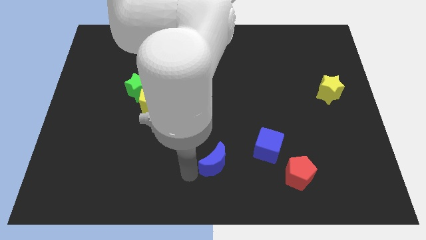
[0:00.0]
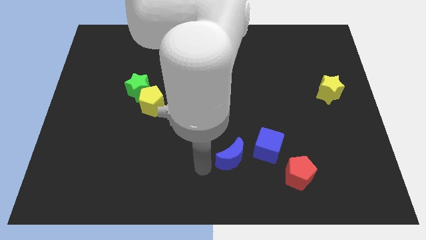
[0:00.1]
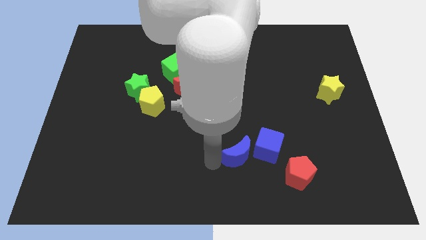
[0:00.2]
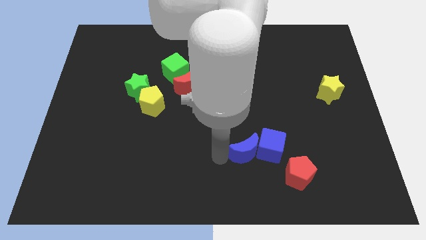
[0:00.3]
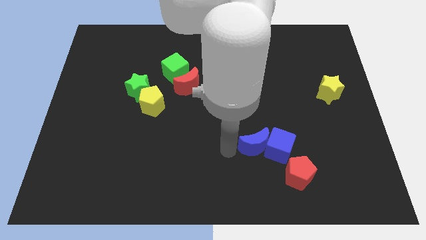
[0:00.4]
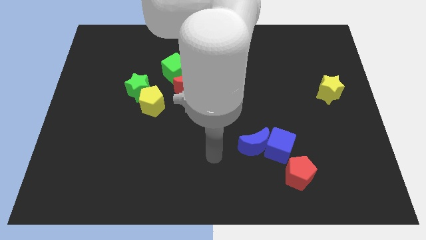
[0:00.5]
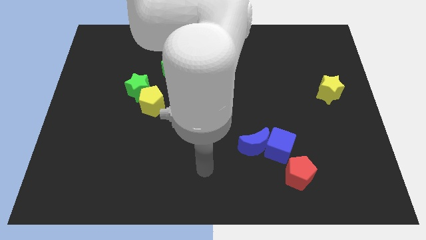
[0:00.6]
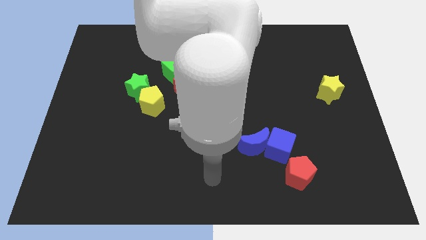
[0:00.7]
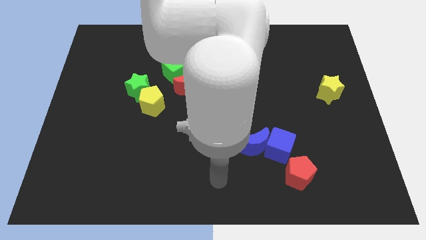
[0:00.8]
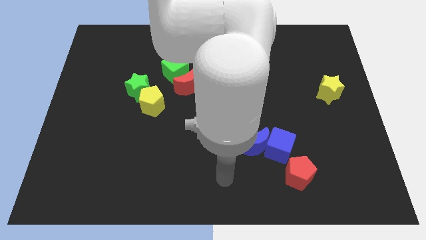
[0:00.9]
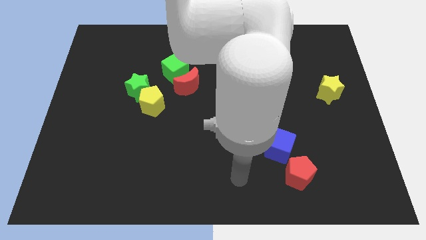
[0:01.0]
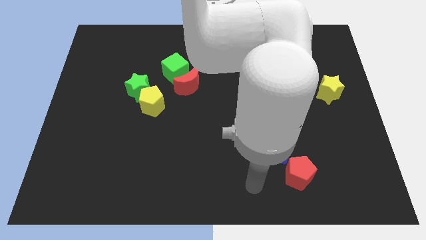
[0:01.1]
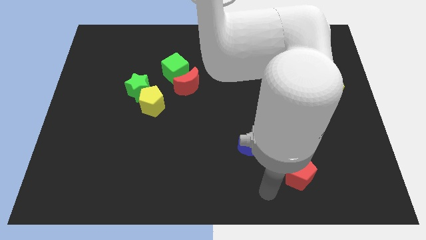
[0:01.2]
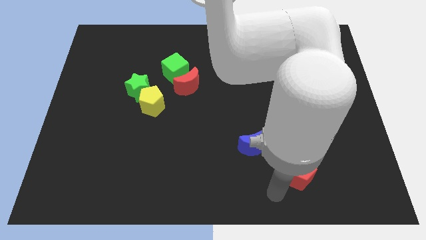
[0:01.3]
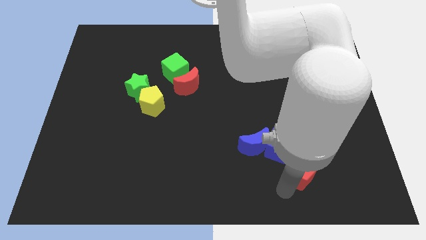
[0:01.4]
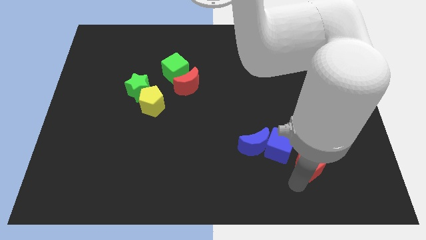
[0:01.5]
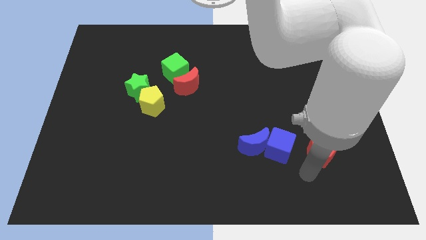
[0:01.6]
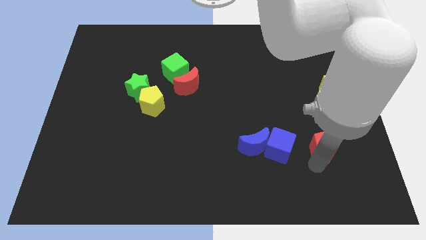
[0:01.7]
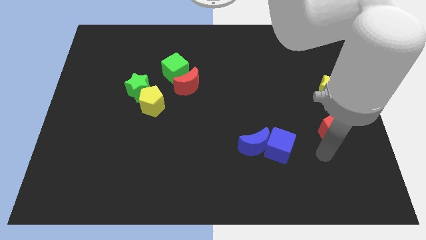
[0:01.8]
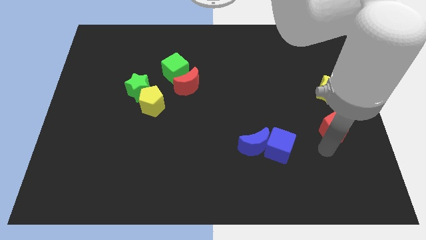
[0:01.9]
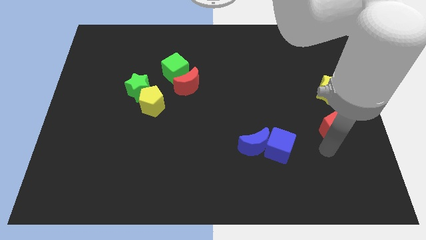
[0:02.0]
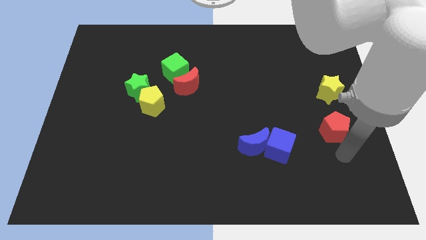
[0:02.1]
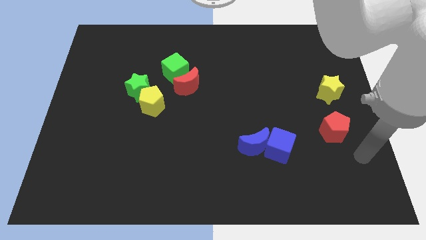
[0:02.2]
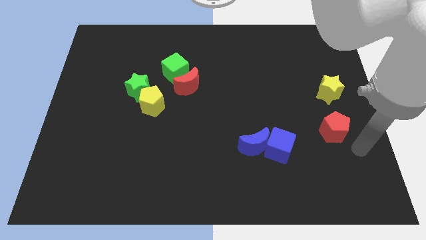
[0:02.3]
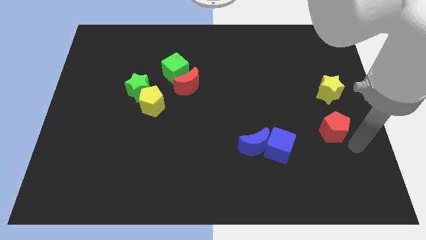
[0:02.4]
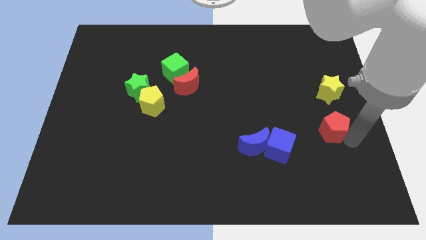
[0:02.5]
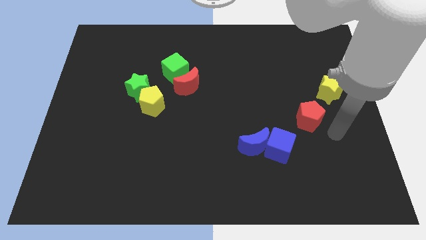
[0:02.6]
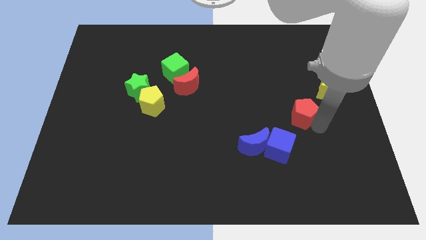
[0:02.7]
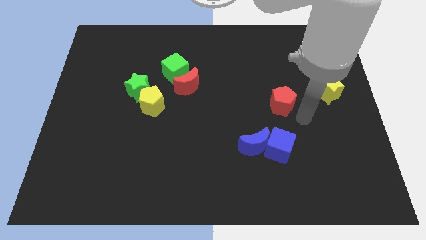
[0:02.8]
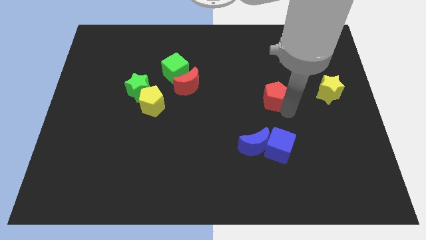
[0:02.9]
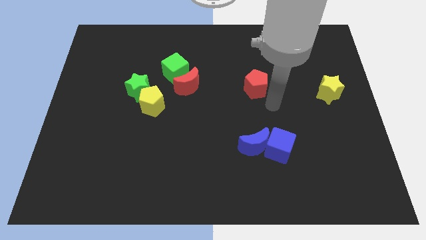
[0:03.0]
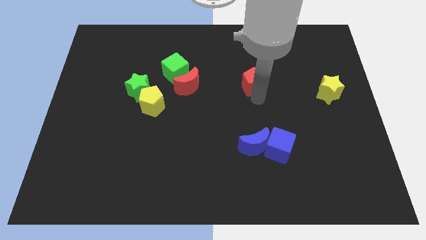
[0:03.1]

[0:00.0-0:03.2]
place the red pentagon right side of the red moon

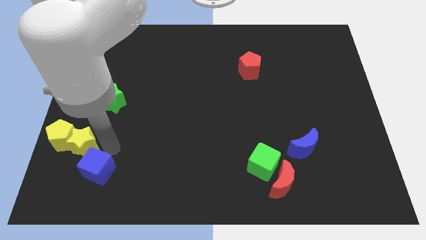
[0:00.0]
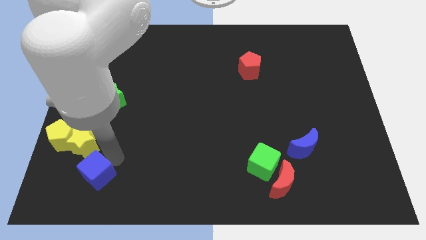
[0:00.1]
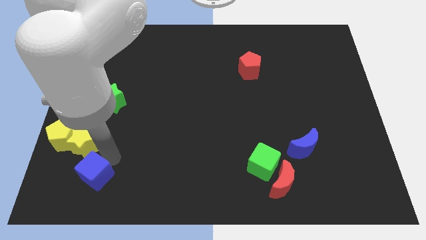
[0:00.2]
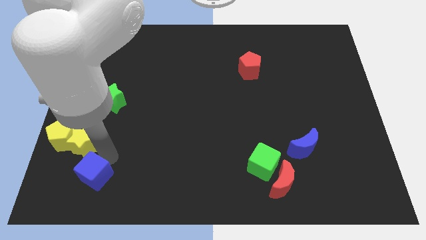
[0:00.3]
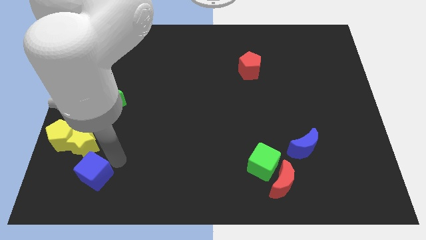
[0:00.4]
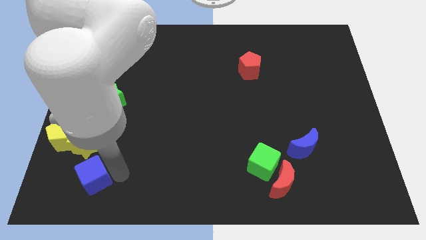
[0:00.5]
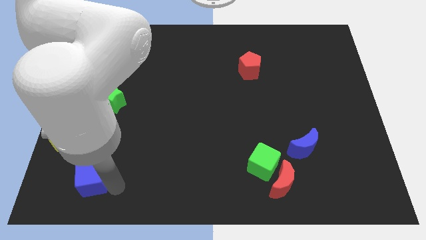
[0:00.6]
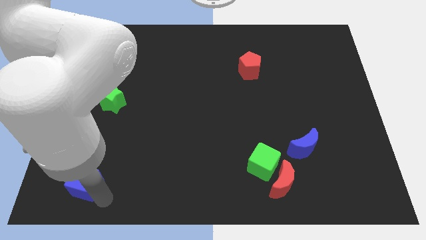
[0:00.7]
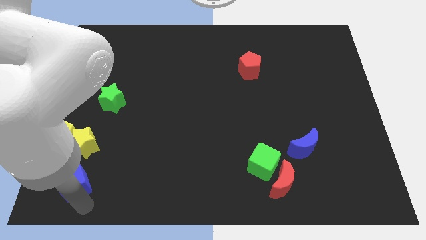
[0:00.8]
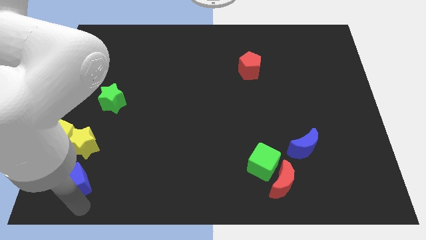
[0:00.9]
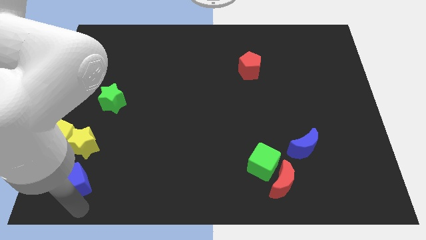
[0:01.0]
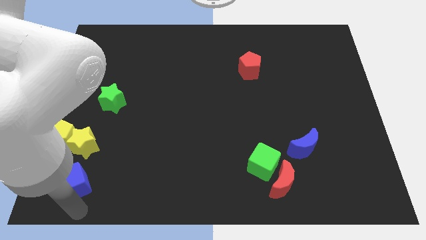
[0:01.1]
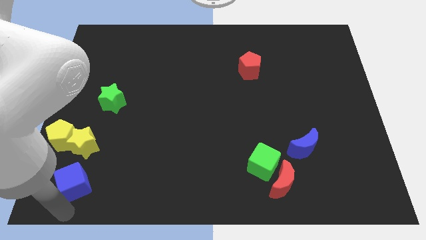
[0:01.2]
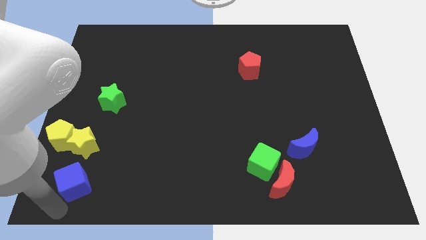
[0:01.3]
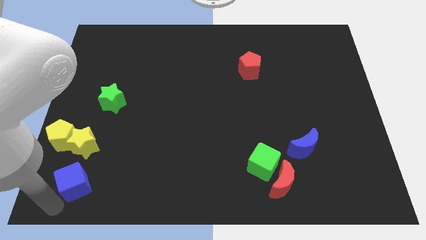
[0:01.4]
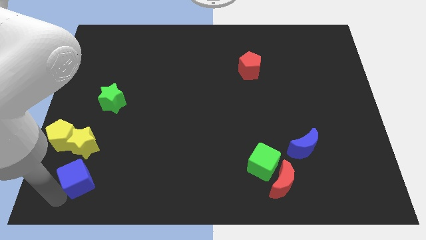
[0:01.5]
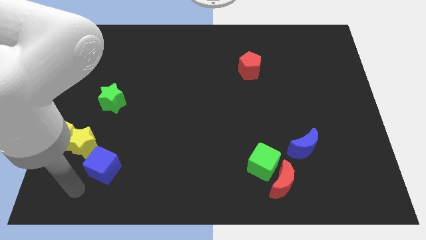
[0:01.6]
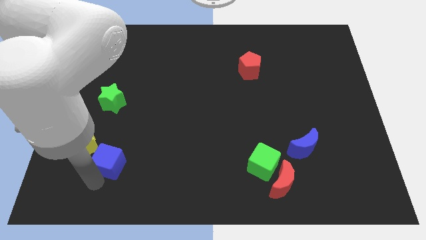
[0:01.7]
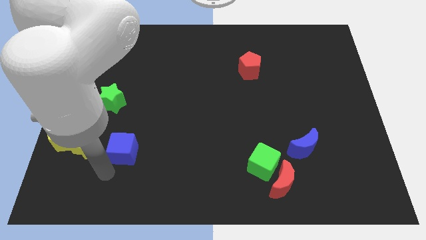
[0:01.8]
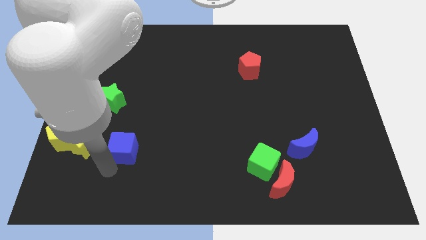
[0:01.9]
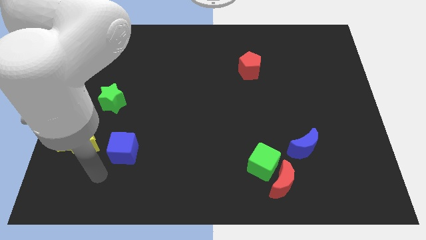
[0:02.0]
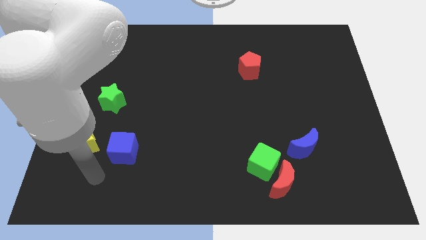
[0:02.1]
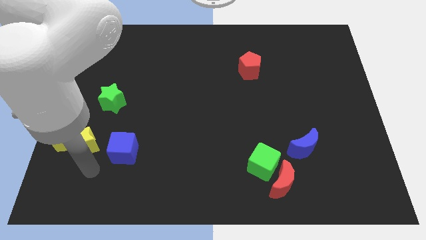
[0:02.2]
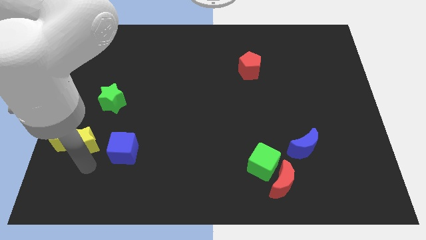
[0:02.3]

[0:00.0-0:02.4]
place the blue cube to the right of the yellow star

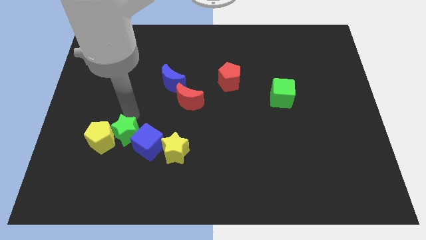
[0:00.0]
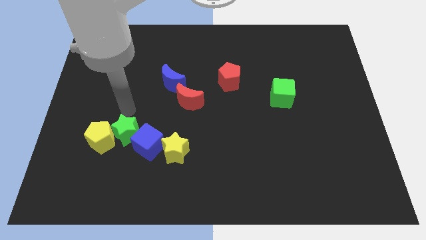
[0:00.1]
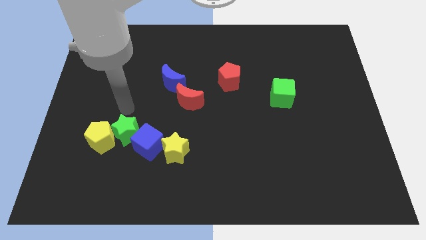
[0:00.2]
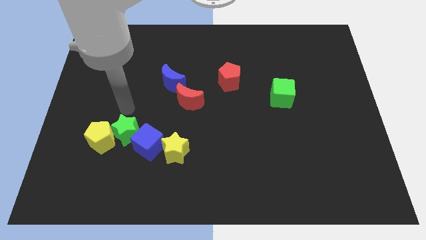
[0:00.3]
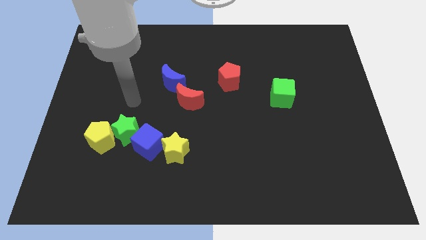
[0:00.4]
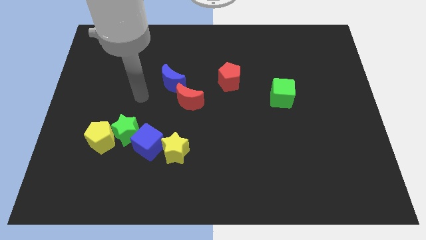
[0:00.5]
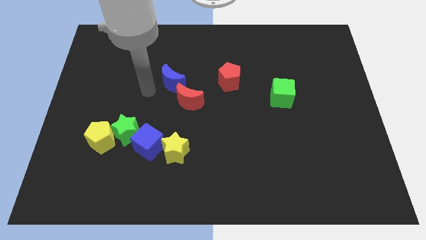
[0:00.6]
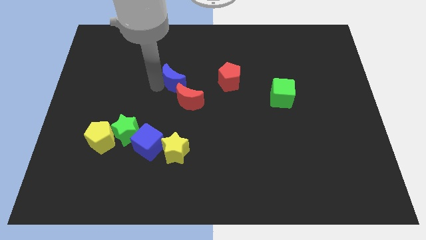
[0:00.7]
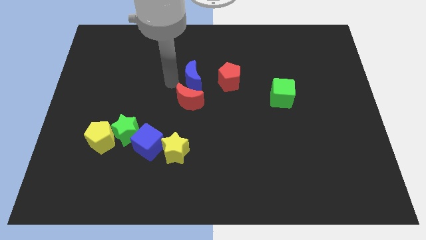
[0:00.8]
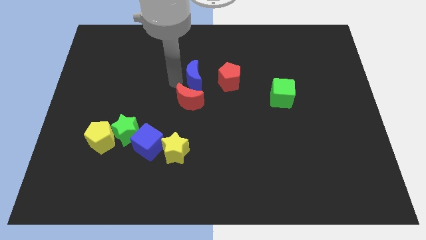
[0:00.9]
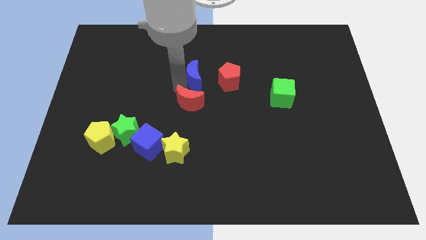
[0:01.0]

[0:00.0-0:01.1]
slide the blue moon towards the top side of the red pentagon

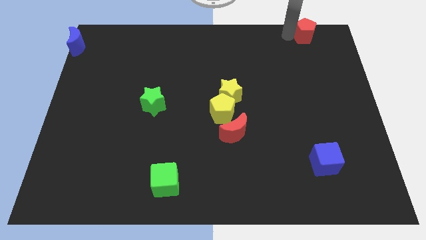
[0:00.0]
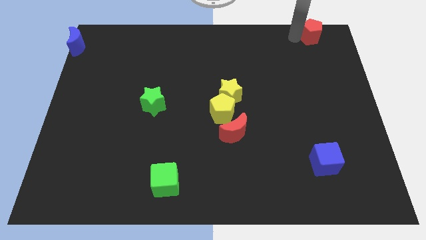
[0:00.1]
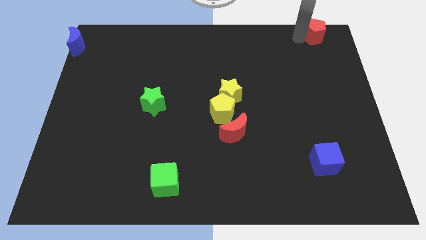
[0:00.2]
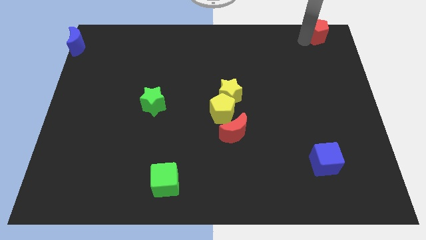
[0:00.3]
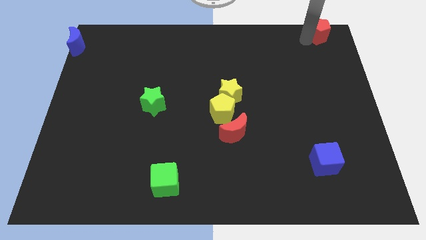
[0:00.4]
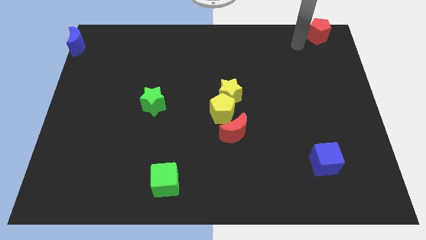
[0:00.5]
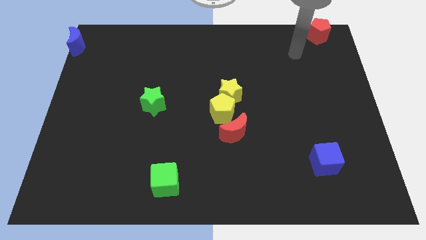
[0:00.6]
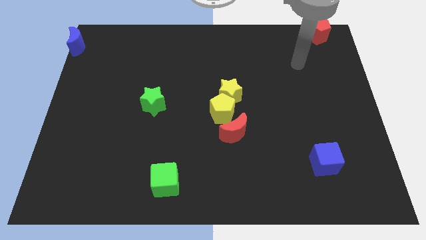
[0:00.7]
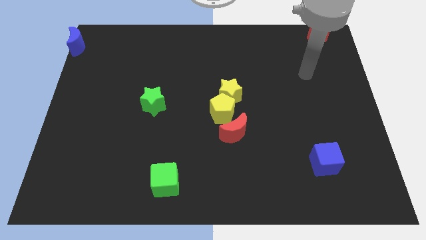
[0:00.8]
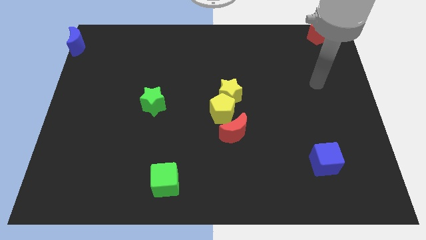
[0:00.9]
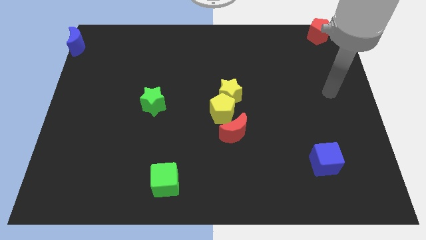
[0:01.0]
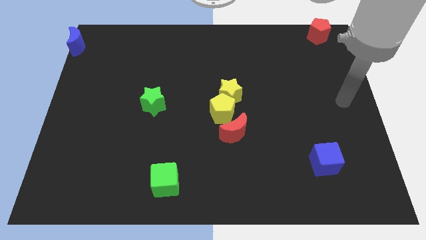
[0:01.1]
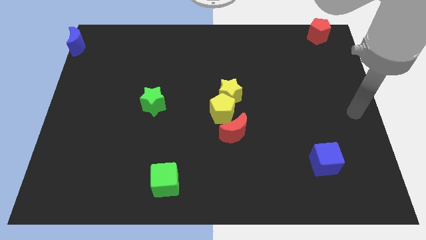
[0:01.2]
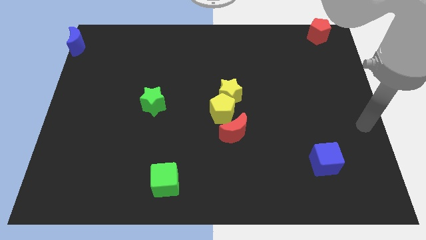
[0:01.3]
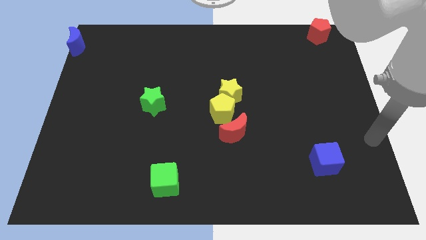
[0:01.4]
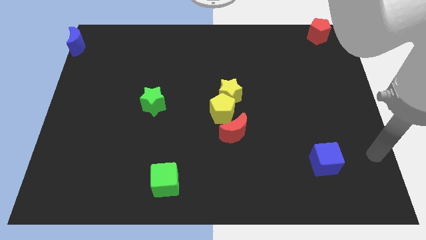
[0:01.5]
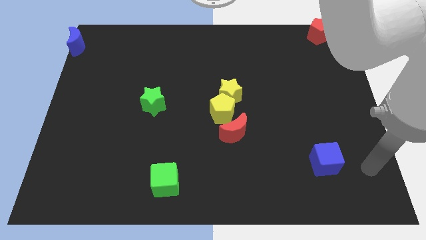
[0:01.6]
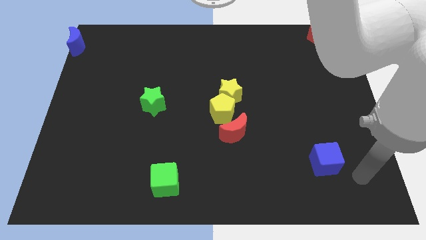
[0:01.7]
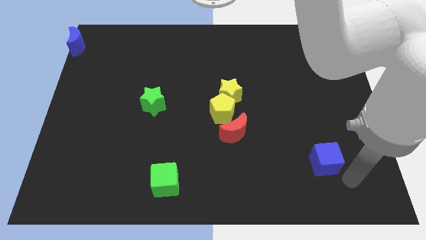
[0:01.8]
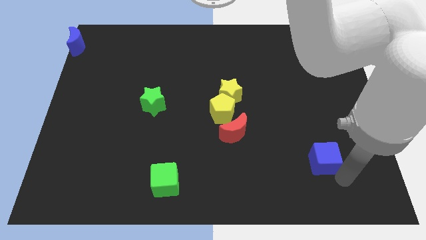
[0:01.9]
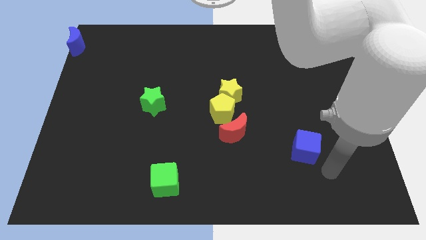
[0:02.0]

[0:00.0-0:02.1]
slightly push the blue cube towards the left
